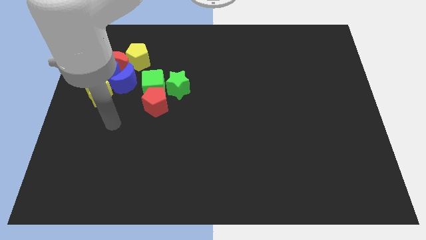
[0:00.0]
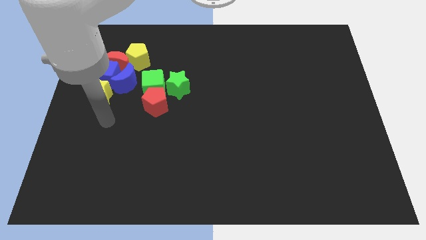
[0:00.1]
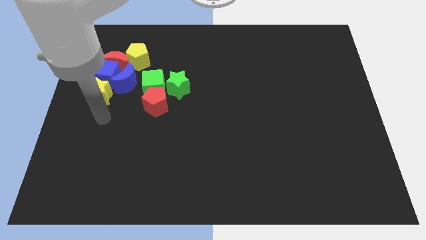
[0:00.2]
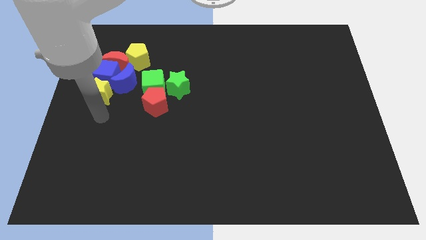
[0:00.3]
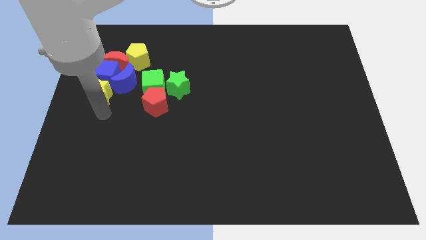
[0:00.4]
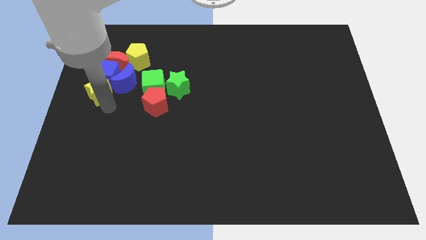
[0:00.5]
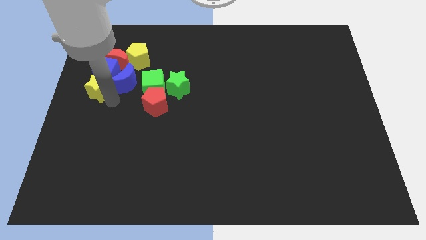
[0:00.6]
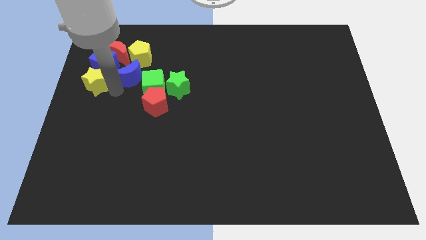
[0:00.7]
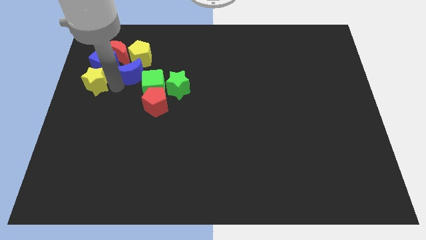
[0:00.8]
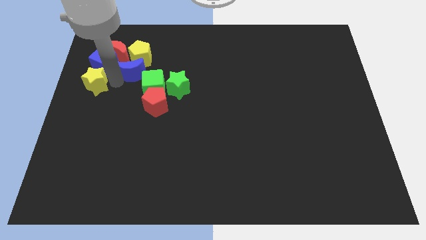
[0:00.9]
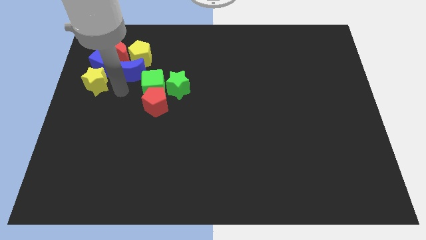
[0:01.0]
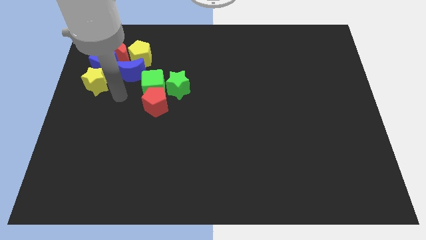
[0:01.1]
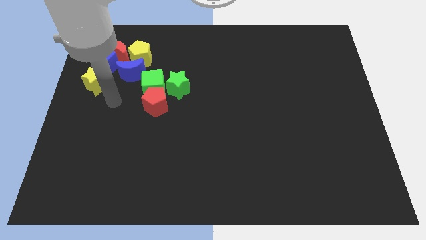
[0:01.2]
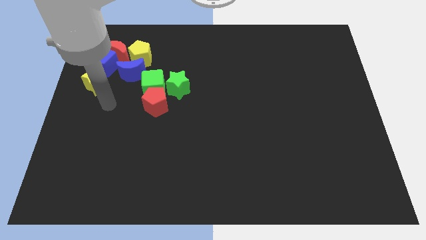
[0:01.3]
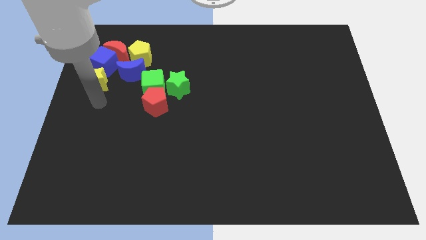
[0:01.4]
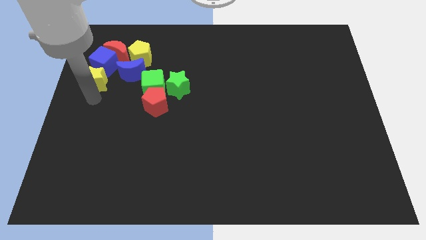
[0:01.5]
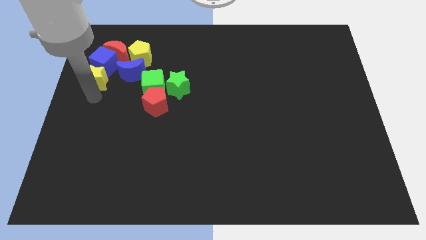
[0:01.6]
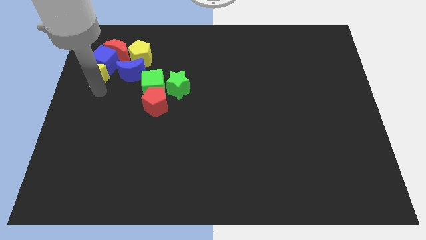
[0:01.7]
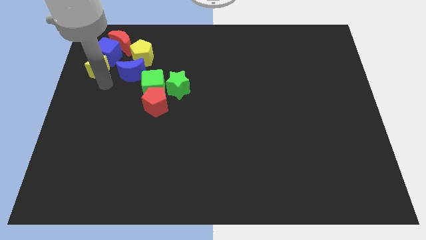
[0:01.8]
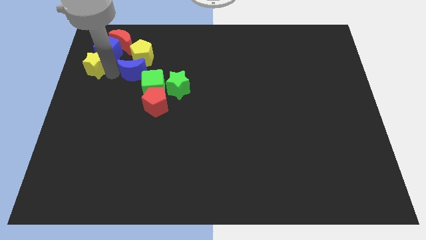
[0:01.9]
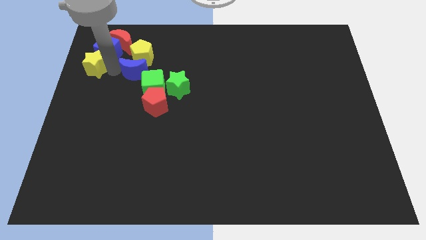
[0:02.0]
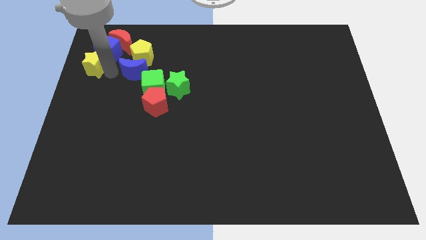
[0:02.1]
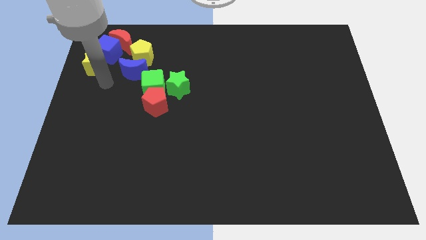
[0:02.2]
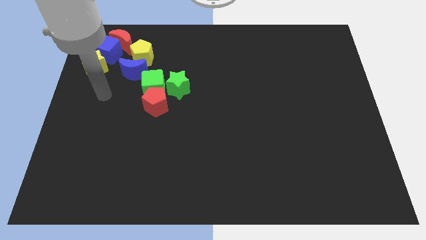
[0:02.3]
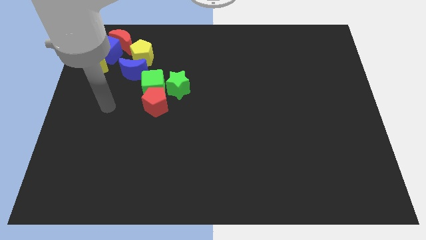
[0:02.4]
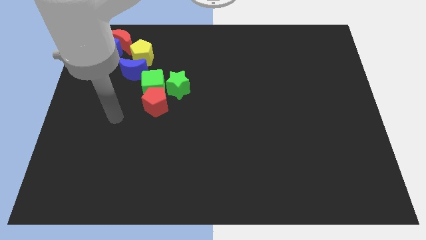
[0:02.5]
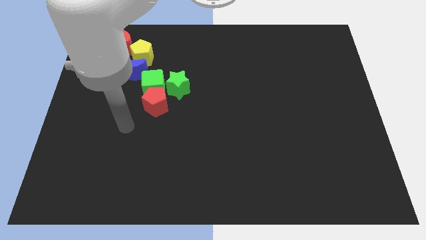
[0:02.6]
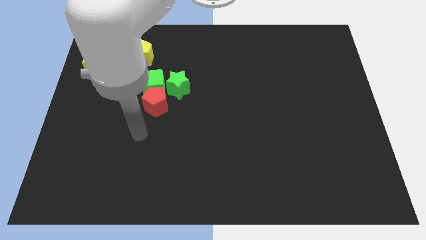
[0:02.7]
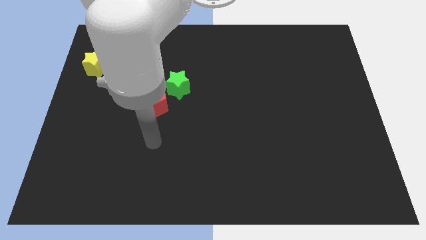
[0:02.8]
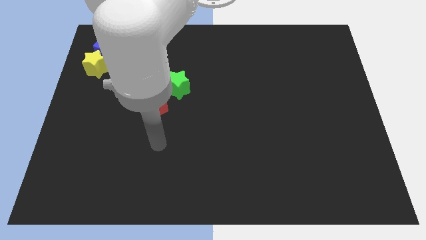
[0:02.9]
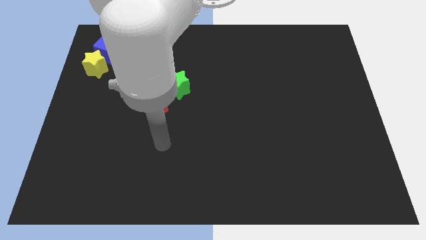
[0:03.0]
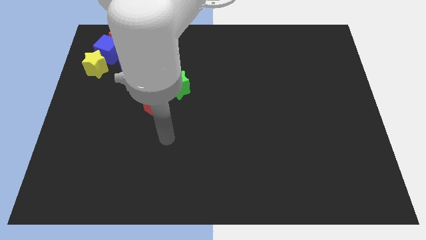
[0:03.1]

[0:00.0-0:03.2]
move the blue moon and the yellow star towards the top

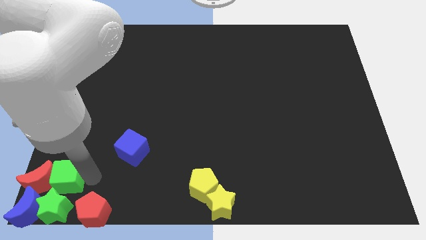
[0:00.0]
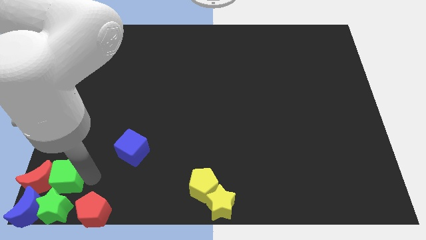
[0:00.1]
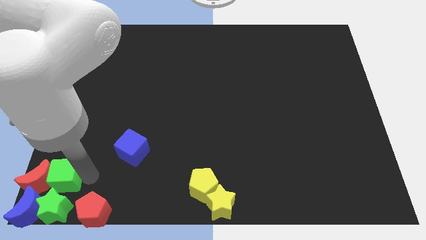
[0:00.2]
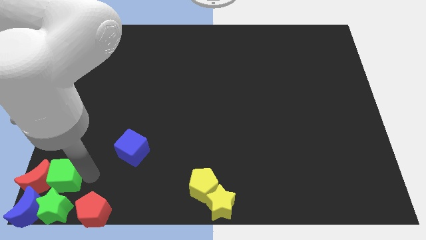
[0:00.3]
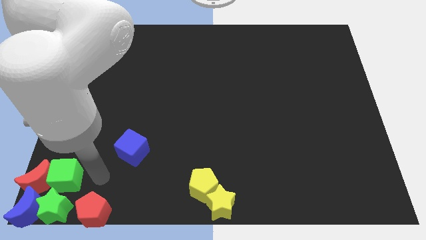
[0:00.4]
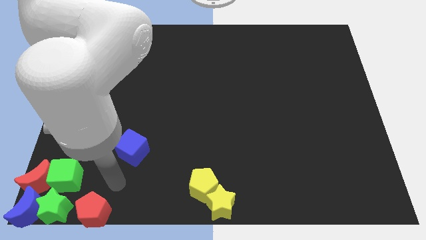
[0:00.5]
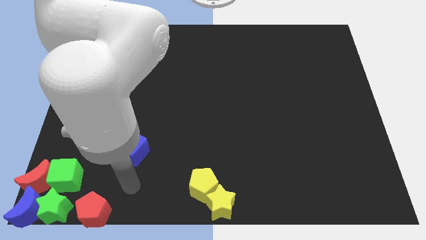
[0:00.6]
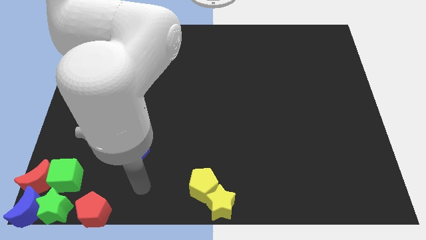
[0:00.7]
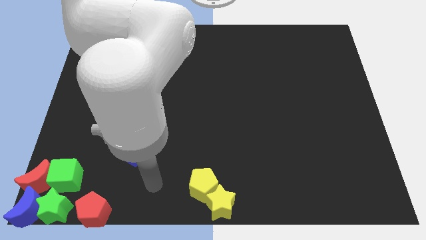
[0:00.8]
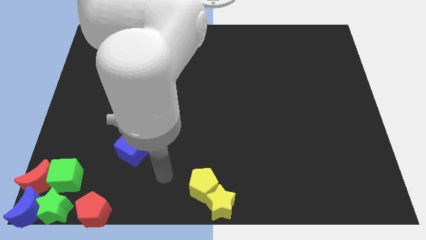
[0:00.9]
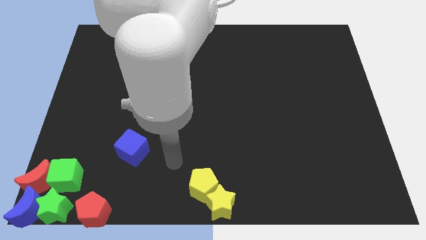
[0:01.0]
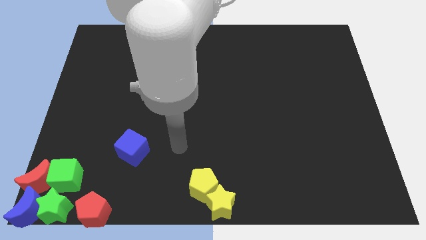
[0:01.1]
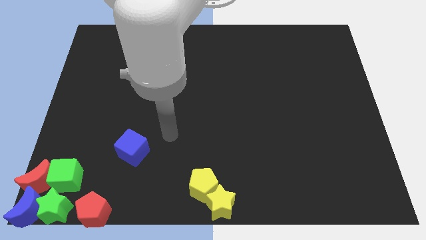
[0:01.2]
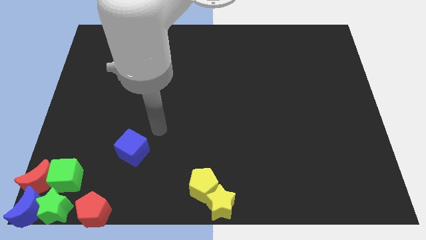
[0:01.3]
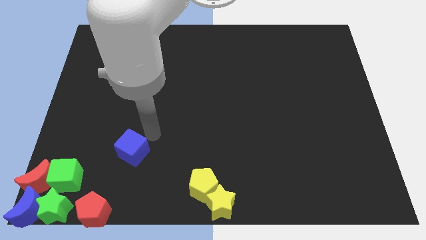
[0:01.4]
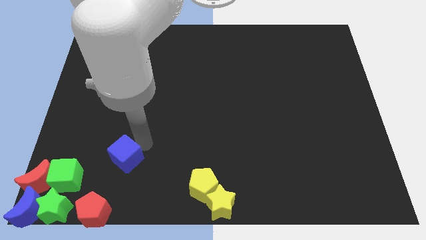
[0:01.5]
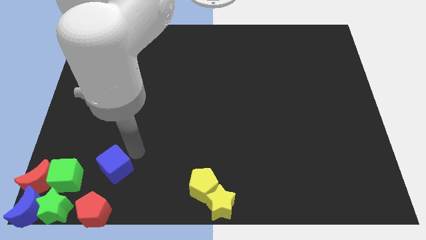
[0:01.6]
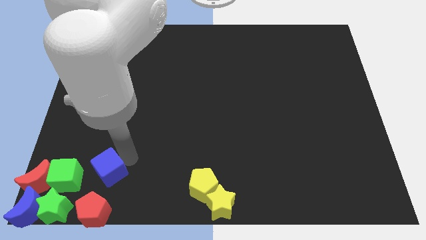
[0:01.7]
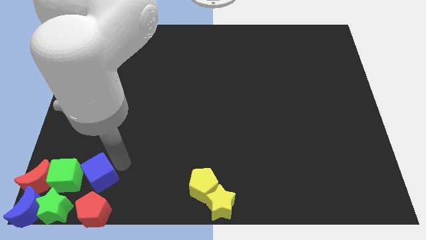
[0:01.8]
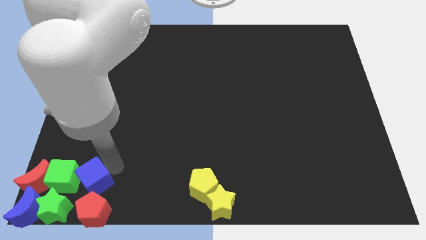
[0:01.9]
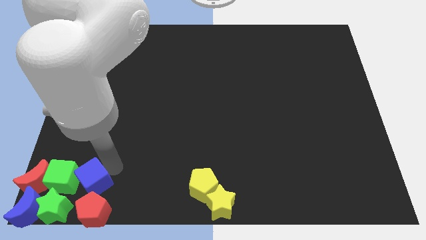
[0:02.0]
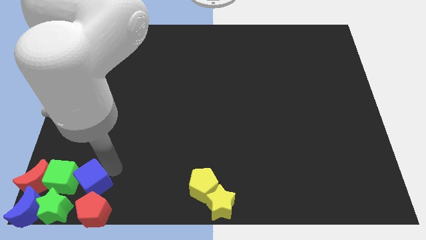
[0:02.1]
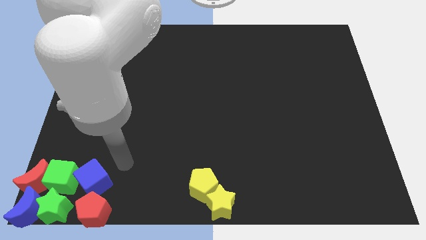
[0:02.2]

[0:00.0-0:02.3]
push blue cube into green cube

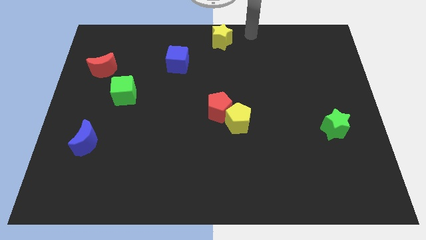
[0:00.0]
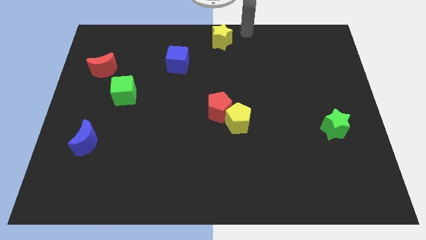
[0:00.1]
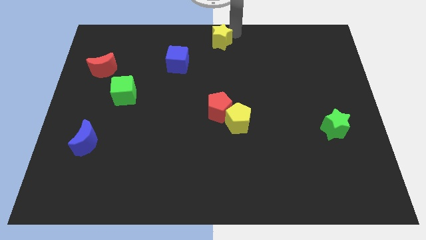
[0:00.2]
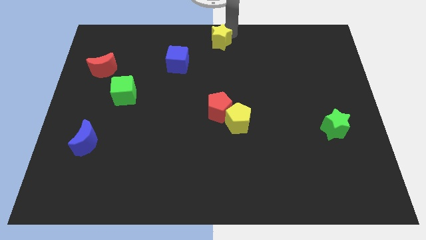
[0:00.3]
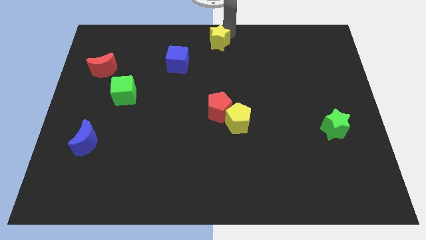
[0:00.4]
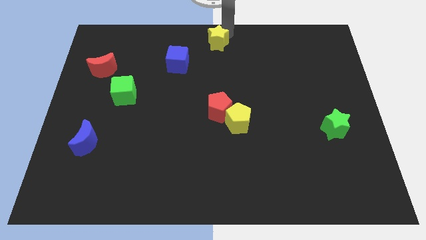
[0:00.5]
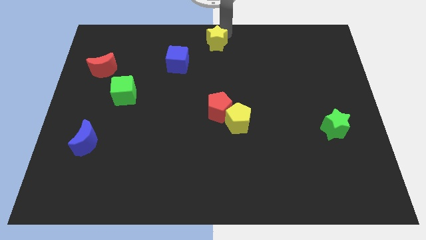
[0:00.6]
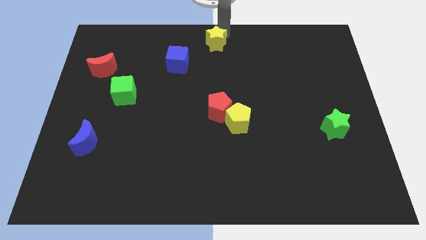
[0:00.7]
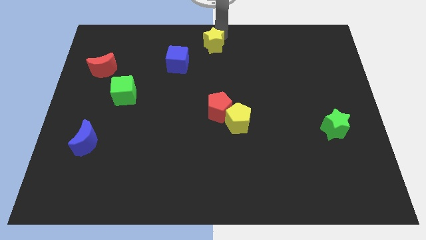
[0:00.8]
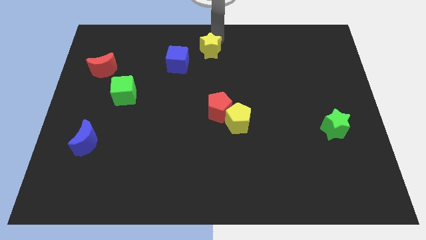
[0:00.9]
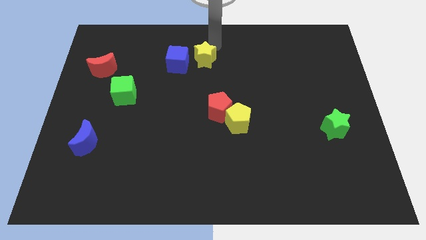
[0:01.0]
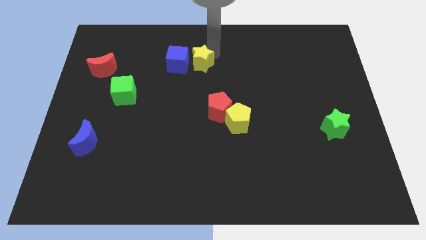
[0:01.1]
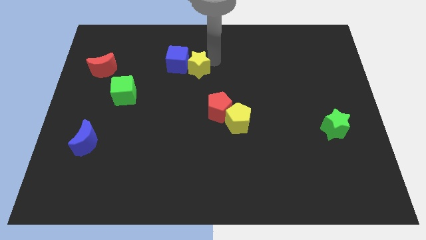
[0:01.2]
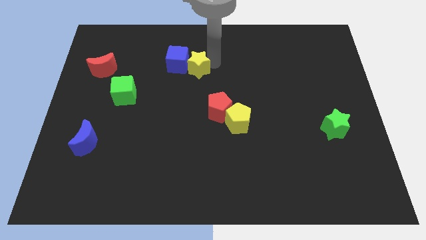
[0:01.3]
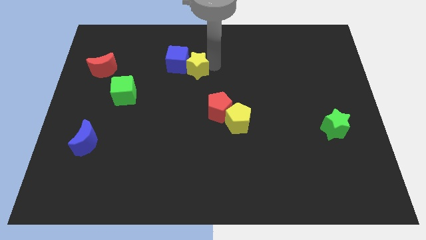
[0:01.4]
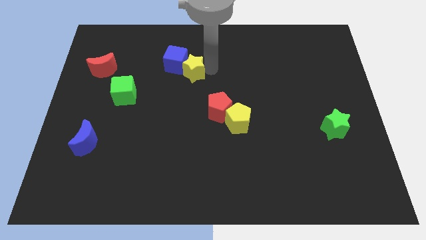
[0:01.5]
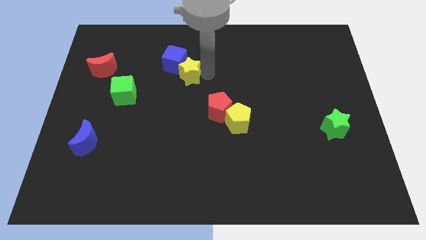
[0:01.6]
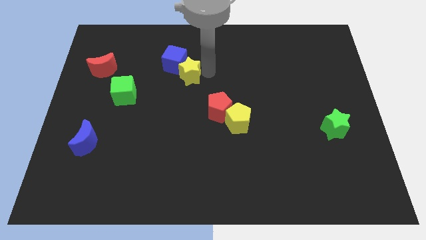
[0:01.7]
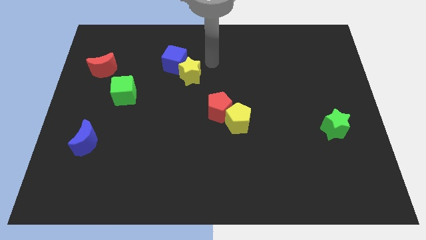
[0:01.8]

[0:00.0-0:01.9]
move the yellow star below right to blue cube

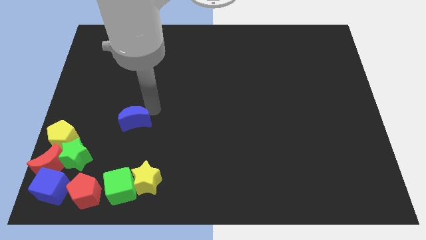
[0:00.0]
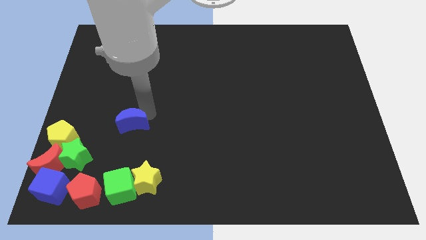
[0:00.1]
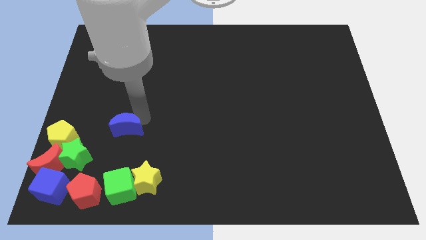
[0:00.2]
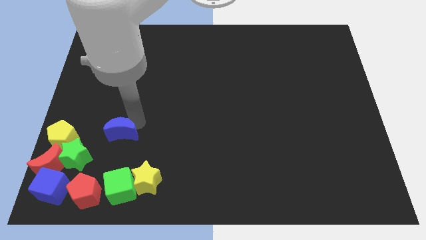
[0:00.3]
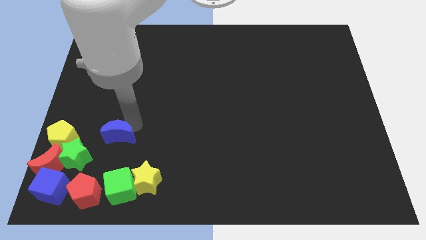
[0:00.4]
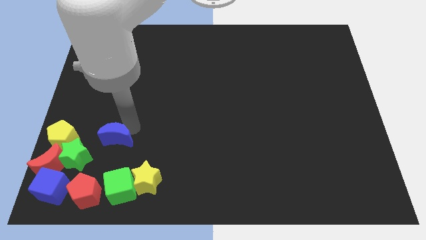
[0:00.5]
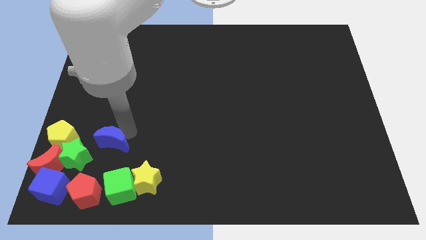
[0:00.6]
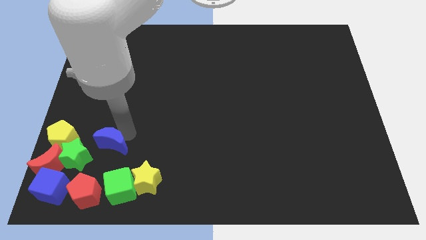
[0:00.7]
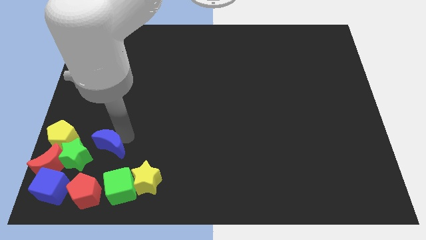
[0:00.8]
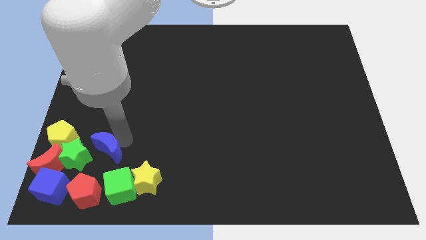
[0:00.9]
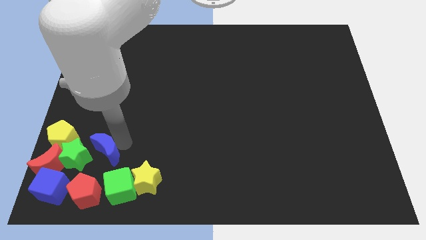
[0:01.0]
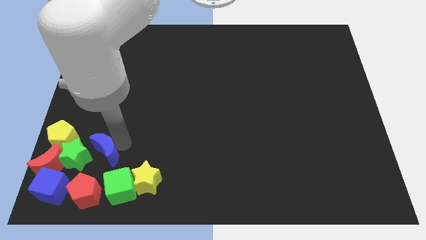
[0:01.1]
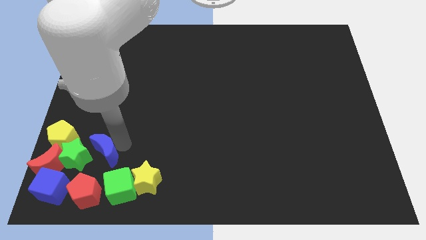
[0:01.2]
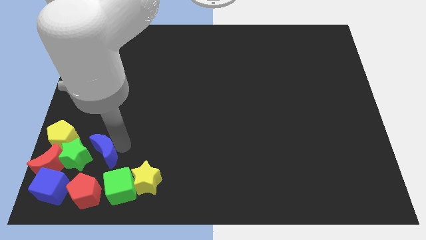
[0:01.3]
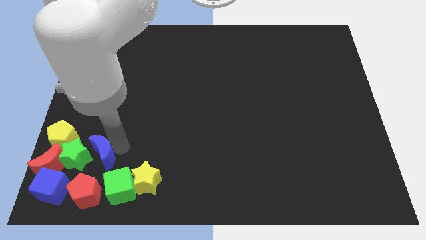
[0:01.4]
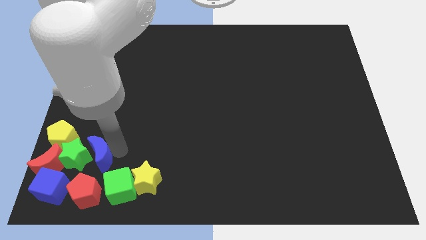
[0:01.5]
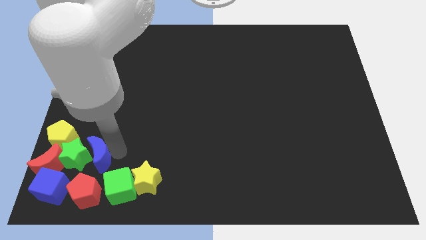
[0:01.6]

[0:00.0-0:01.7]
push blue moon to the right of the green star
